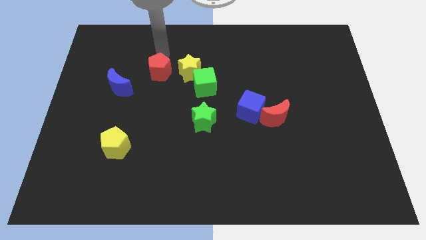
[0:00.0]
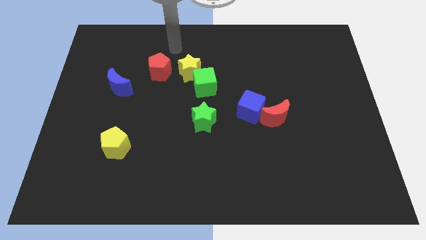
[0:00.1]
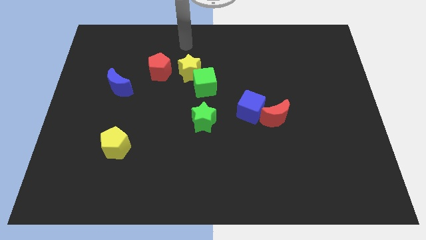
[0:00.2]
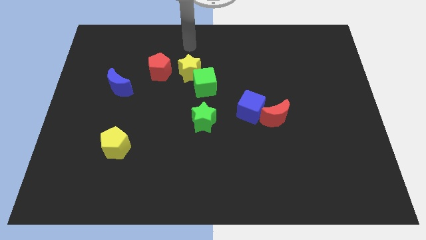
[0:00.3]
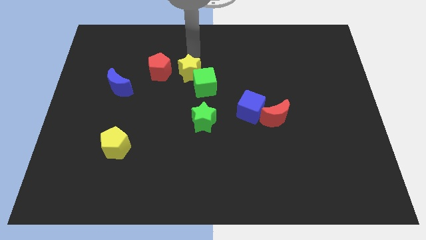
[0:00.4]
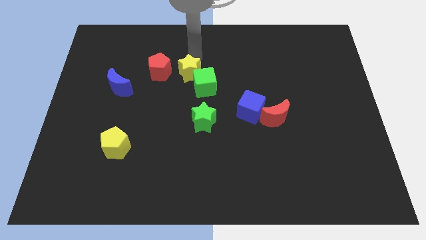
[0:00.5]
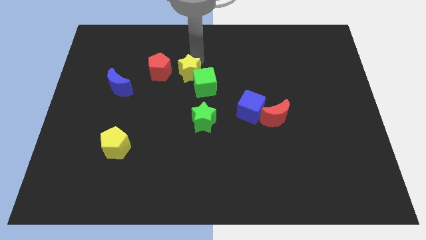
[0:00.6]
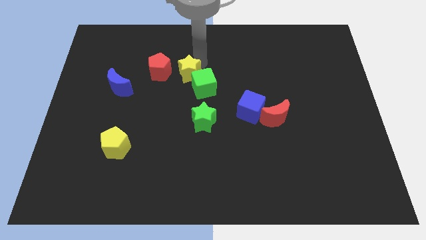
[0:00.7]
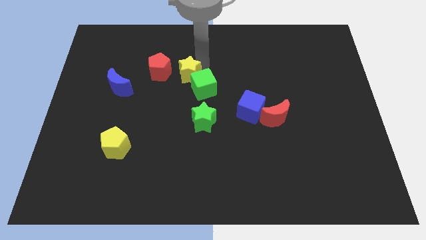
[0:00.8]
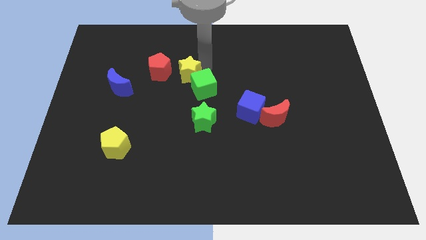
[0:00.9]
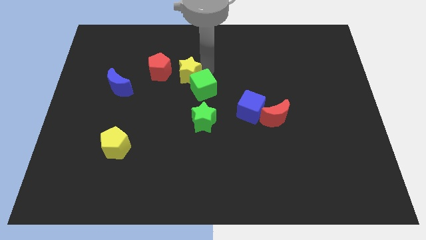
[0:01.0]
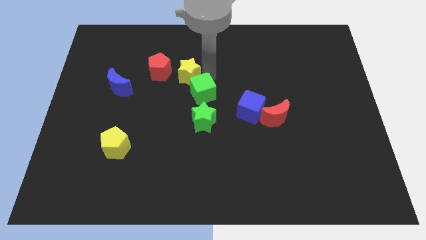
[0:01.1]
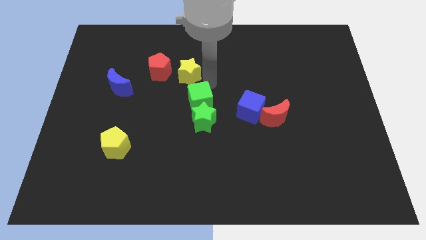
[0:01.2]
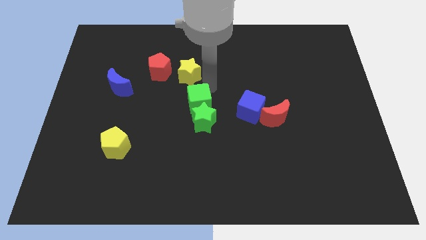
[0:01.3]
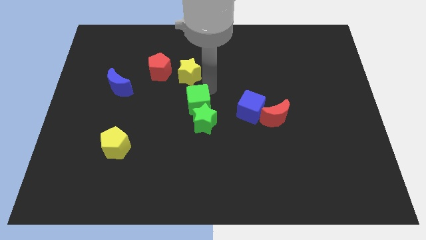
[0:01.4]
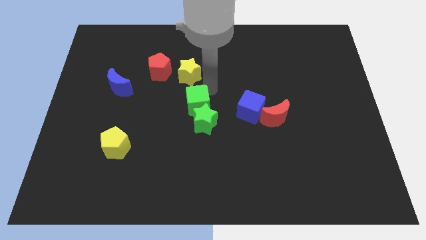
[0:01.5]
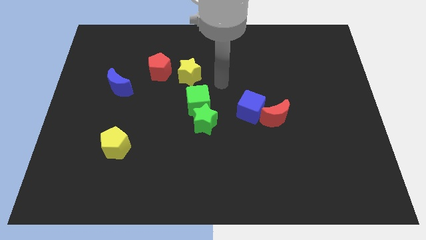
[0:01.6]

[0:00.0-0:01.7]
move the green cube into the green star

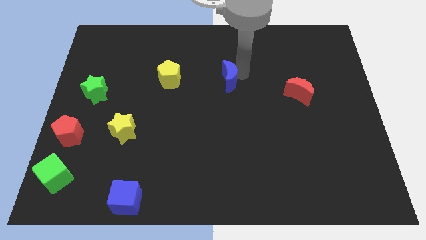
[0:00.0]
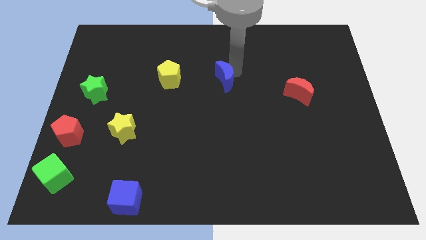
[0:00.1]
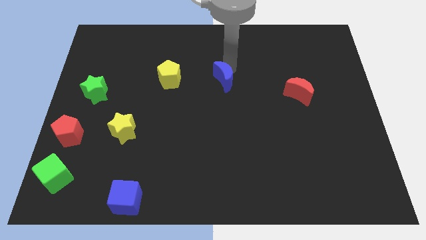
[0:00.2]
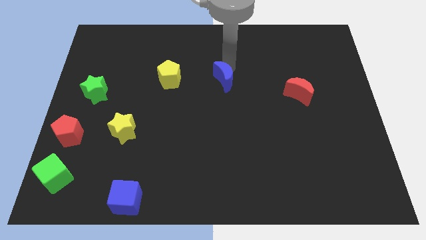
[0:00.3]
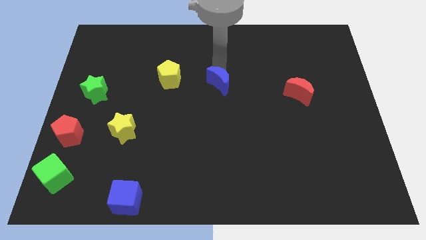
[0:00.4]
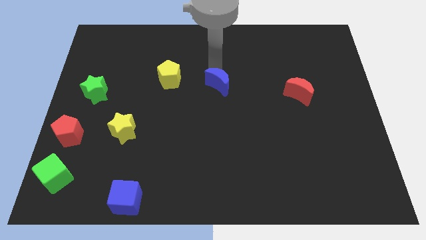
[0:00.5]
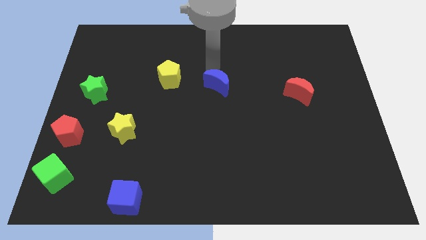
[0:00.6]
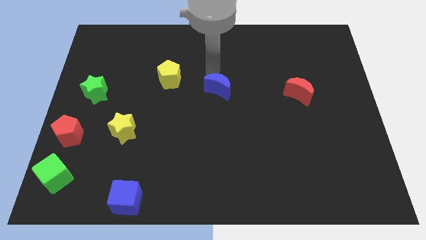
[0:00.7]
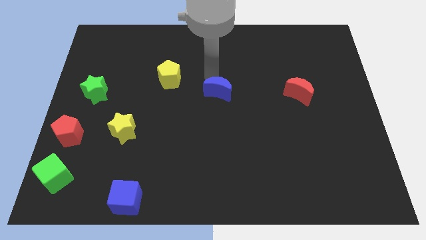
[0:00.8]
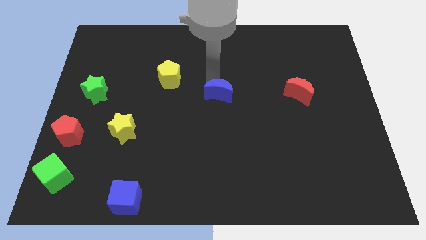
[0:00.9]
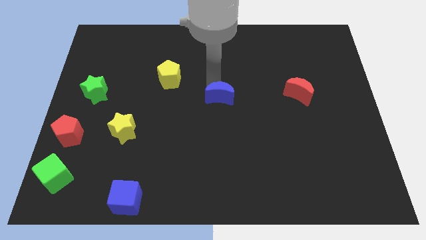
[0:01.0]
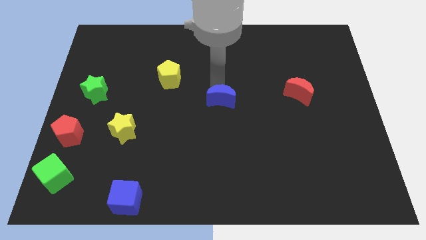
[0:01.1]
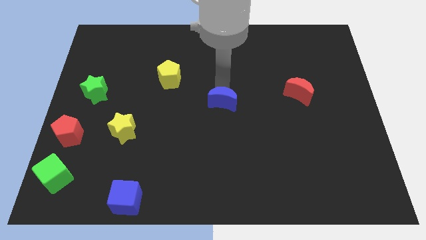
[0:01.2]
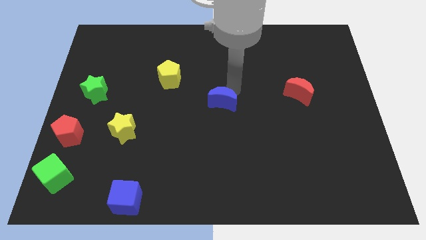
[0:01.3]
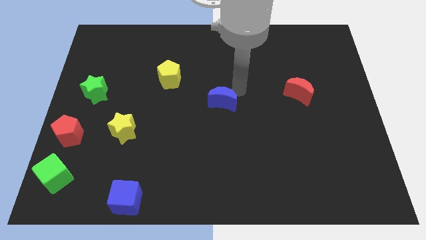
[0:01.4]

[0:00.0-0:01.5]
move the blue crescent to the bottom right of the yellow pentagon

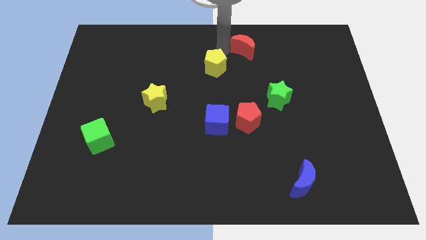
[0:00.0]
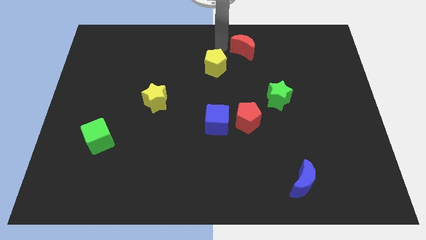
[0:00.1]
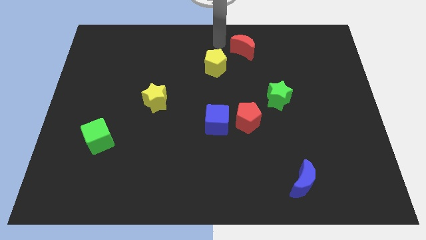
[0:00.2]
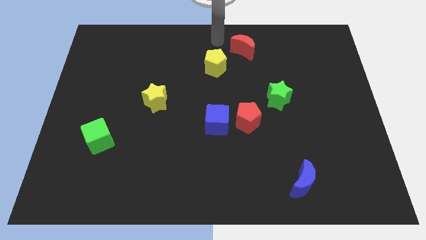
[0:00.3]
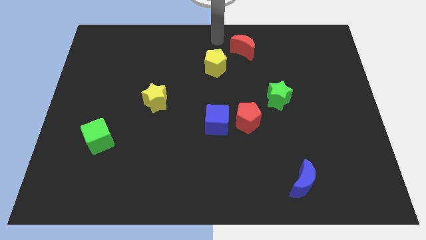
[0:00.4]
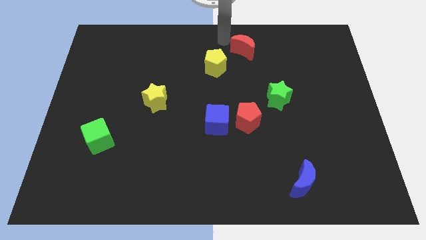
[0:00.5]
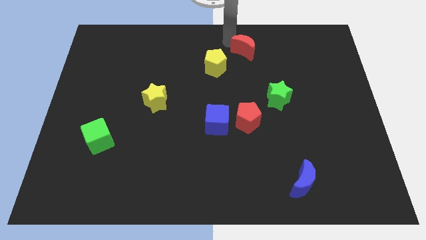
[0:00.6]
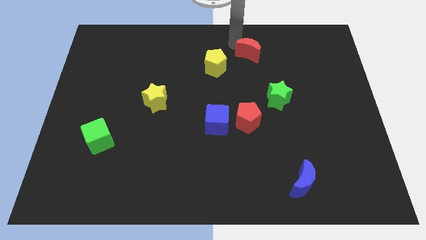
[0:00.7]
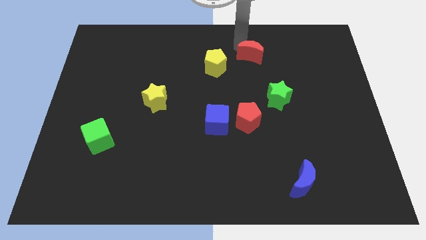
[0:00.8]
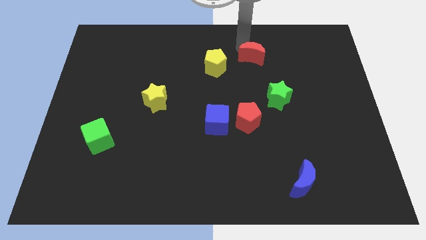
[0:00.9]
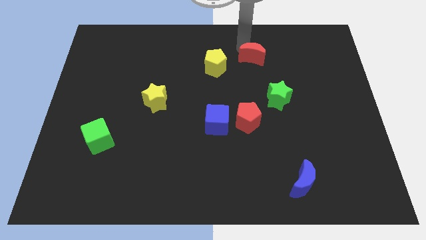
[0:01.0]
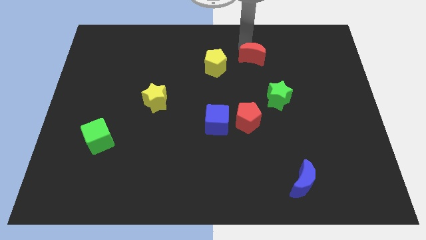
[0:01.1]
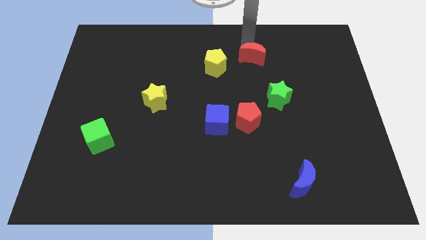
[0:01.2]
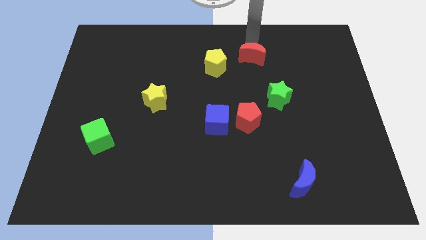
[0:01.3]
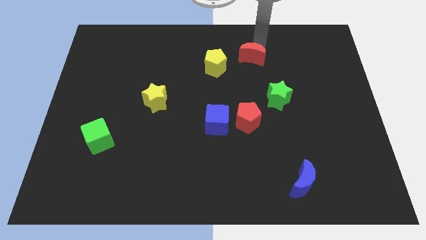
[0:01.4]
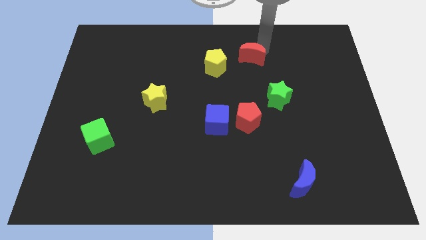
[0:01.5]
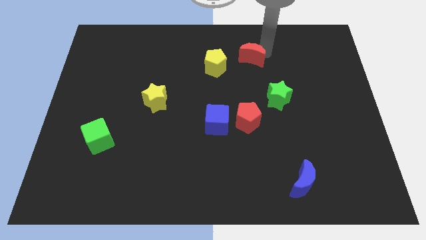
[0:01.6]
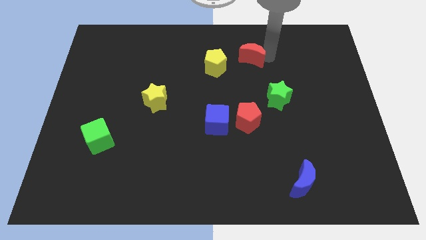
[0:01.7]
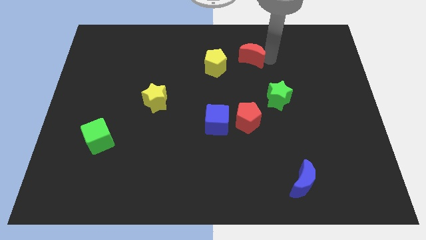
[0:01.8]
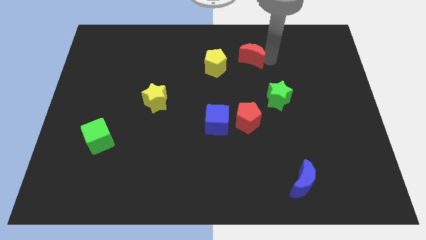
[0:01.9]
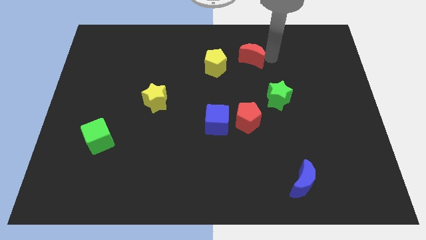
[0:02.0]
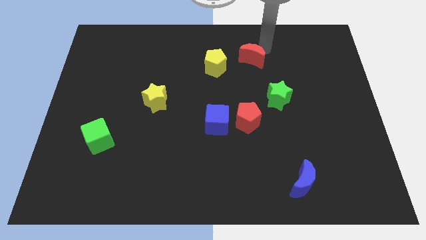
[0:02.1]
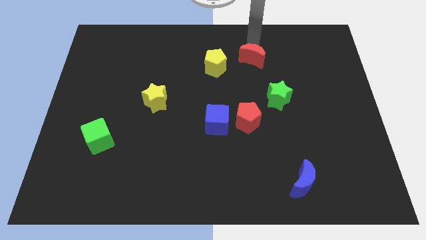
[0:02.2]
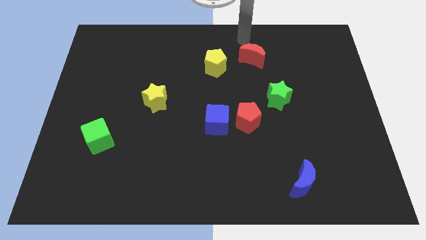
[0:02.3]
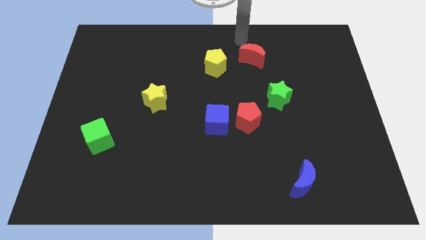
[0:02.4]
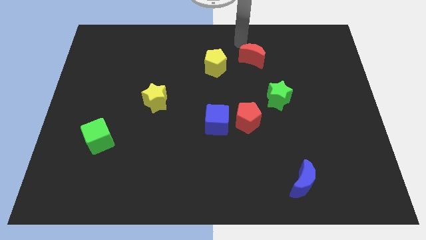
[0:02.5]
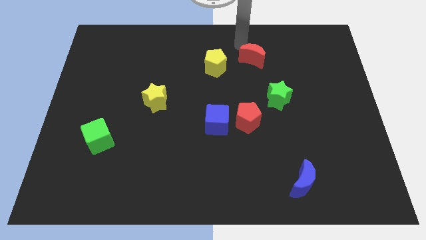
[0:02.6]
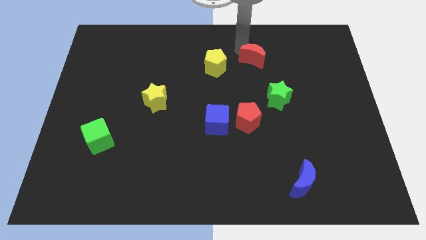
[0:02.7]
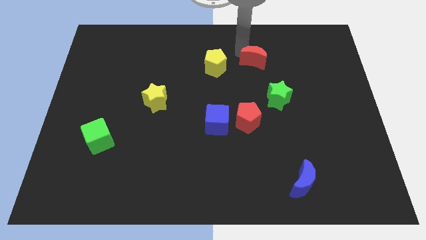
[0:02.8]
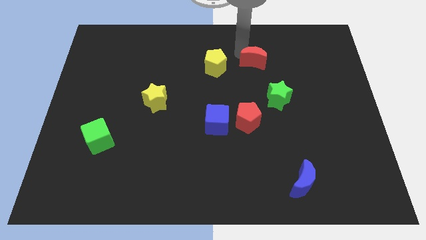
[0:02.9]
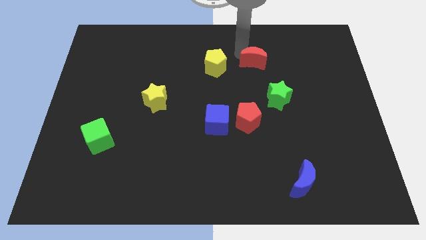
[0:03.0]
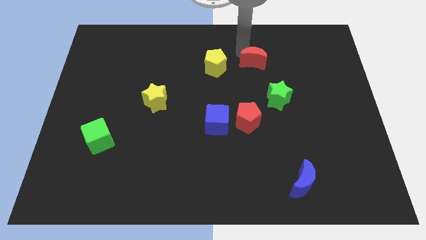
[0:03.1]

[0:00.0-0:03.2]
place red crescent parallel to the right side of the yellow pentagon

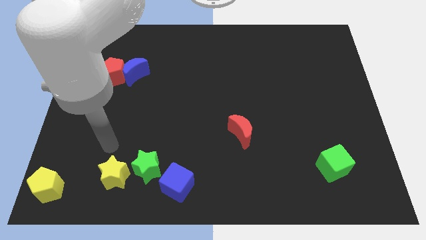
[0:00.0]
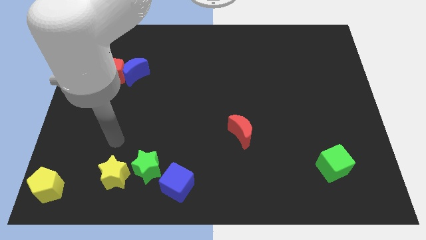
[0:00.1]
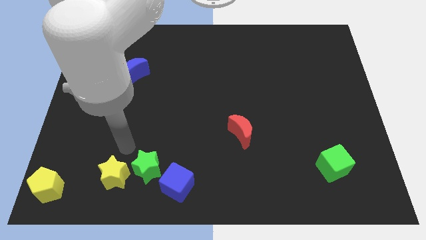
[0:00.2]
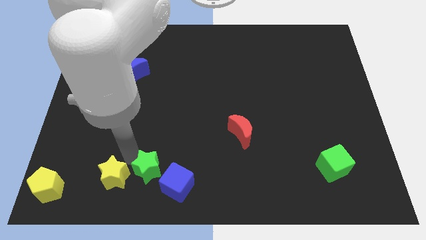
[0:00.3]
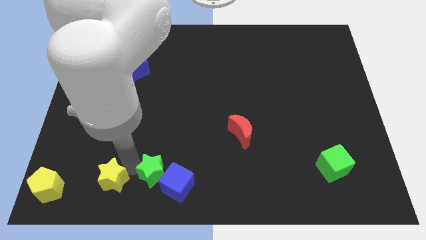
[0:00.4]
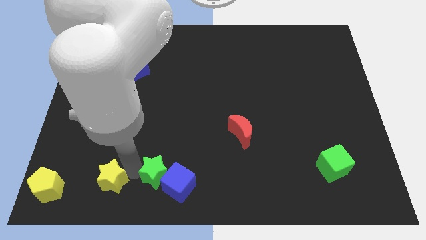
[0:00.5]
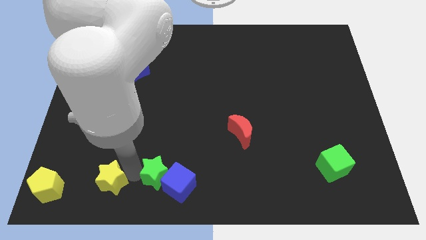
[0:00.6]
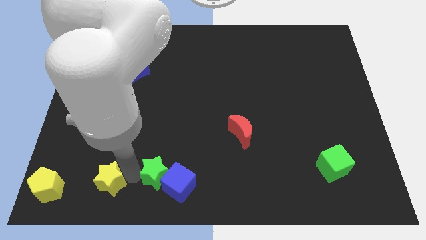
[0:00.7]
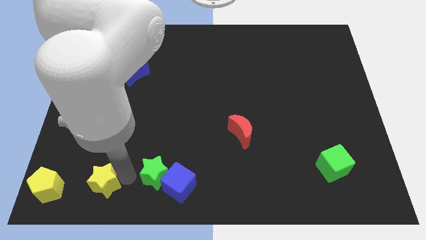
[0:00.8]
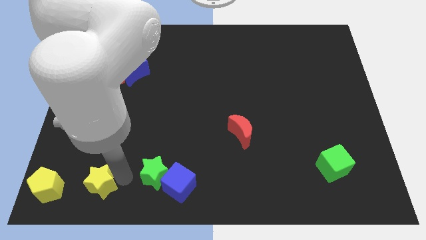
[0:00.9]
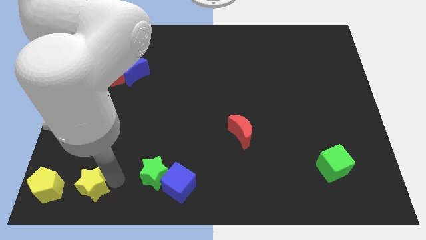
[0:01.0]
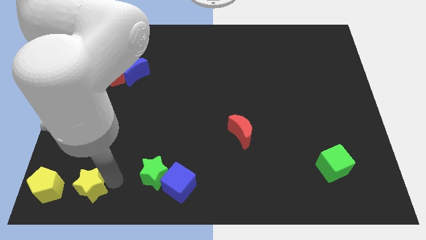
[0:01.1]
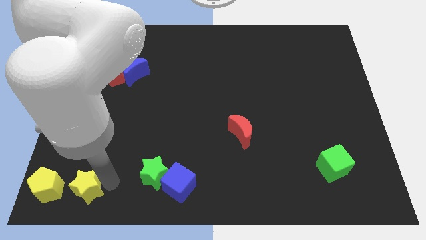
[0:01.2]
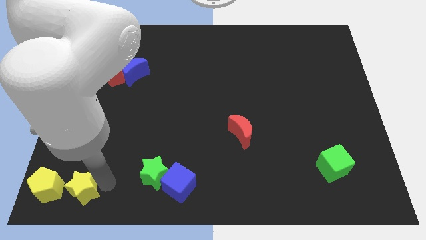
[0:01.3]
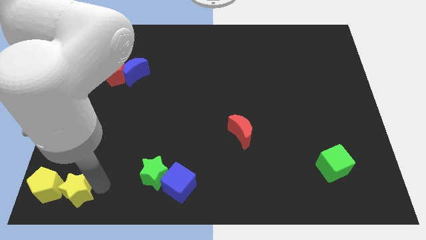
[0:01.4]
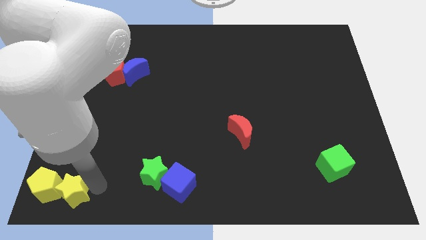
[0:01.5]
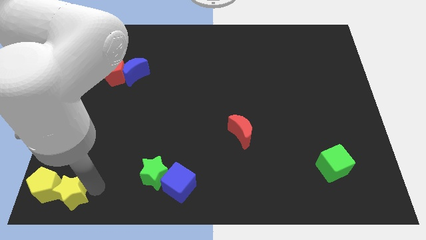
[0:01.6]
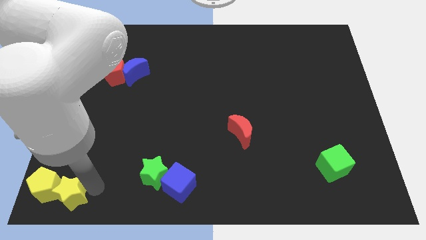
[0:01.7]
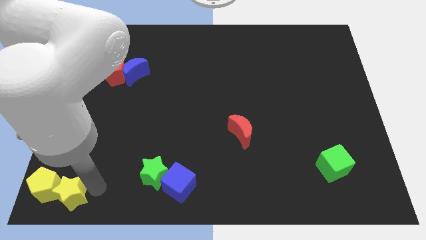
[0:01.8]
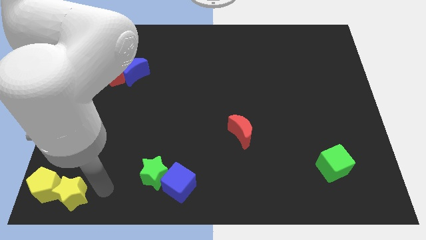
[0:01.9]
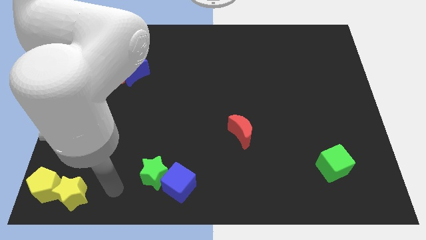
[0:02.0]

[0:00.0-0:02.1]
put the yellow blocks together

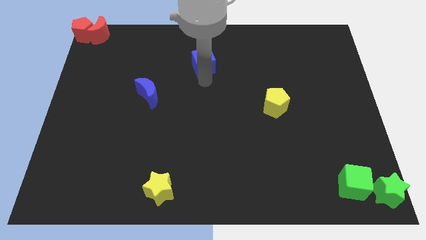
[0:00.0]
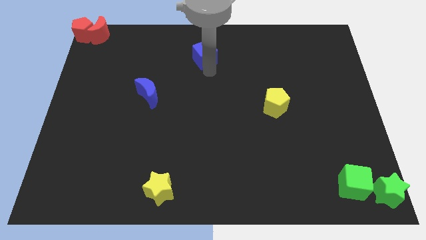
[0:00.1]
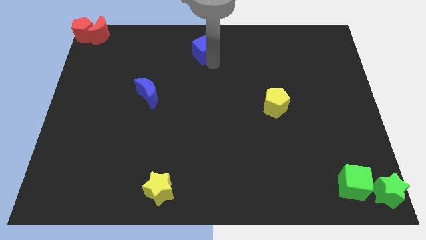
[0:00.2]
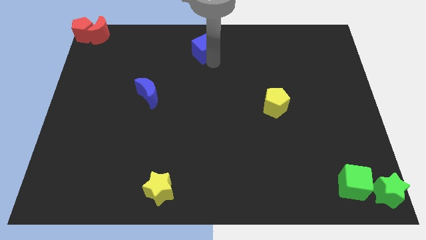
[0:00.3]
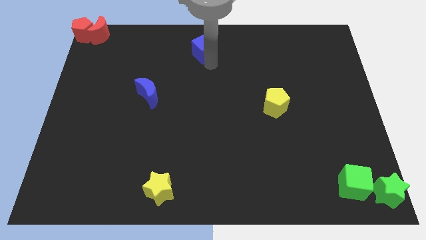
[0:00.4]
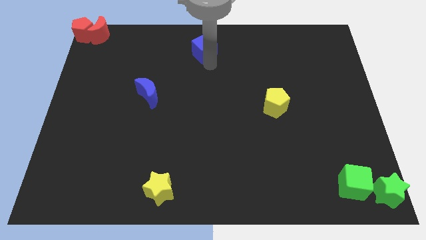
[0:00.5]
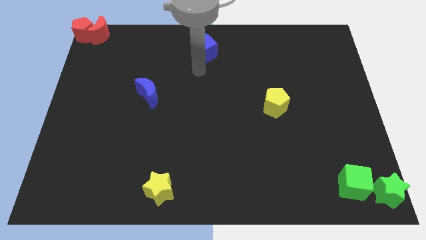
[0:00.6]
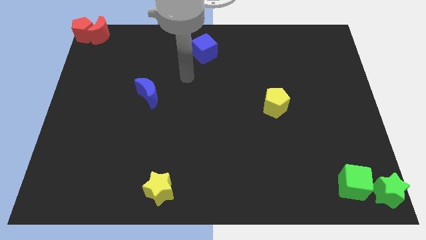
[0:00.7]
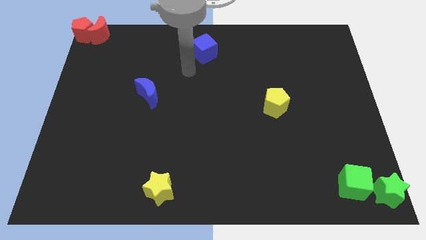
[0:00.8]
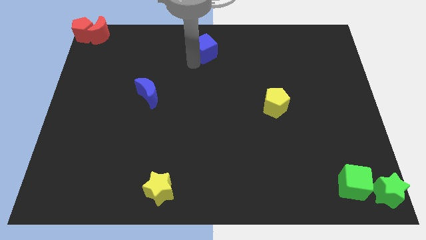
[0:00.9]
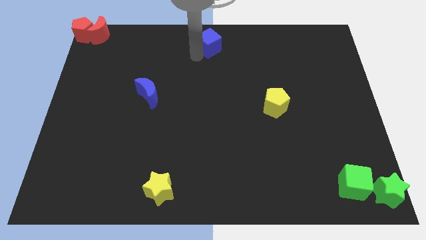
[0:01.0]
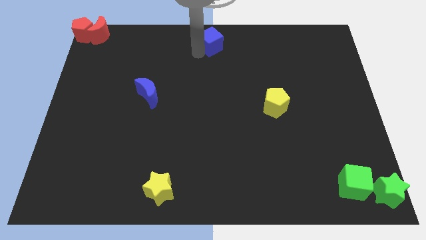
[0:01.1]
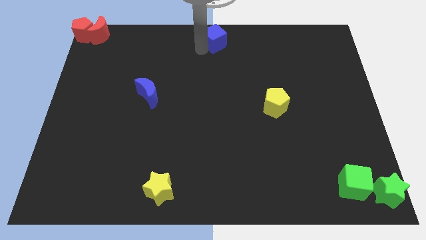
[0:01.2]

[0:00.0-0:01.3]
push the blue cube to the top center of the board
